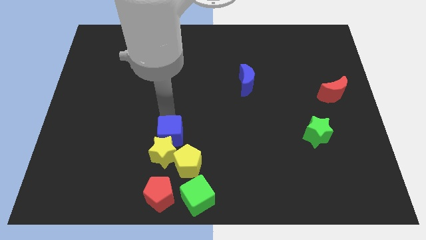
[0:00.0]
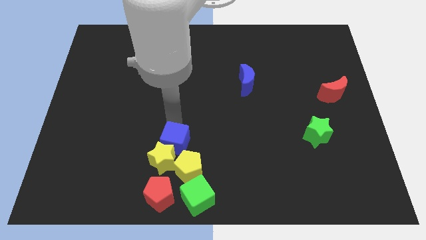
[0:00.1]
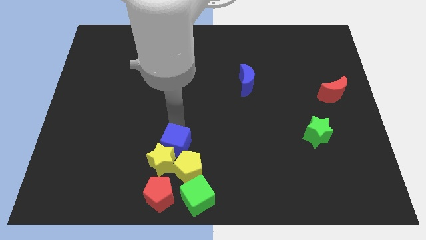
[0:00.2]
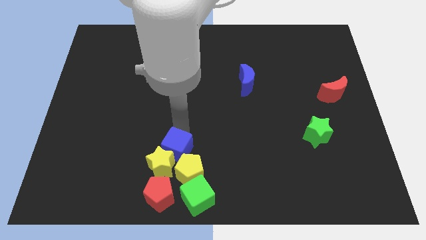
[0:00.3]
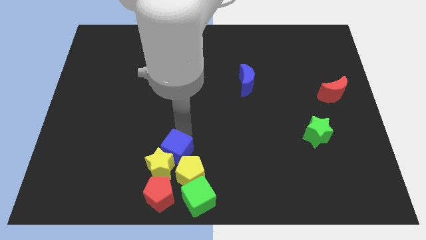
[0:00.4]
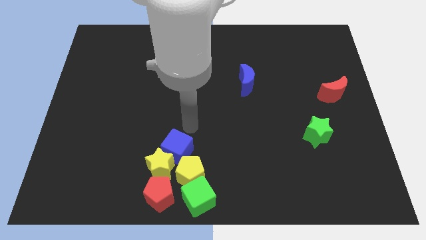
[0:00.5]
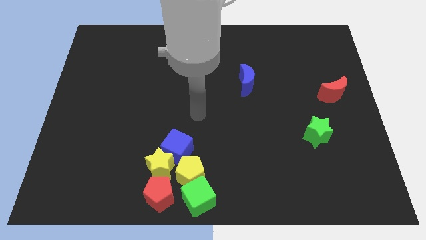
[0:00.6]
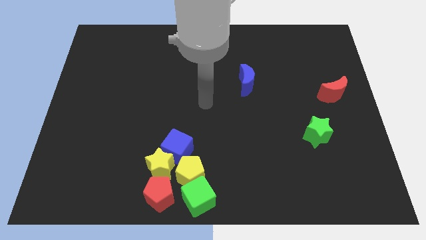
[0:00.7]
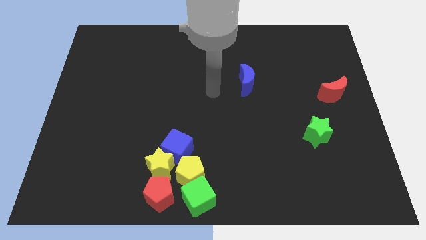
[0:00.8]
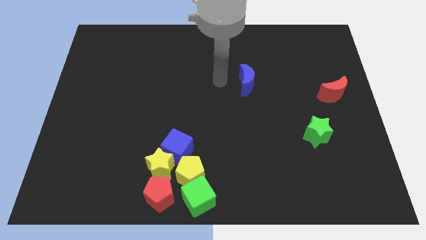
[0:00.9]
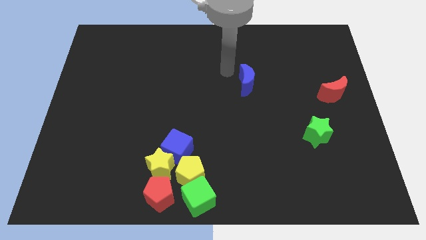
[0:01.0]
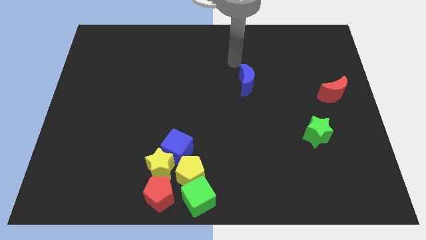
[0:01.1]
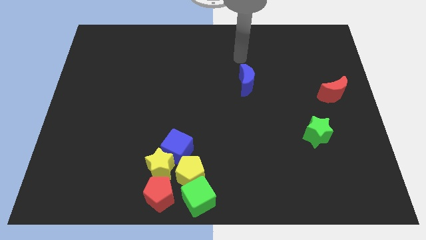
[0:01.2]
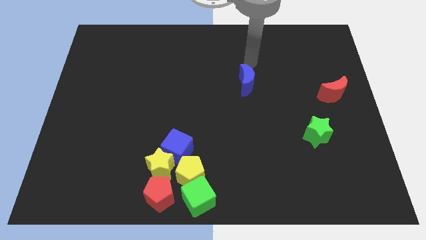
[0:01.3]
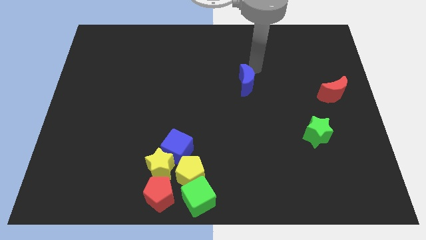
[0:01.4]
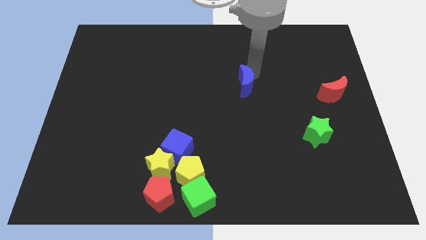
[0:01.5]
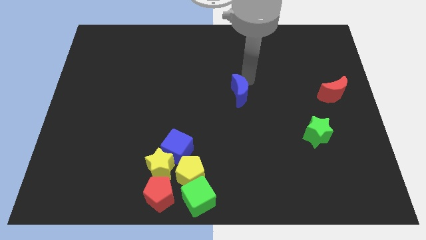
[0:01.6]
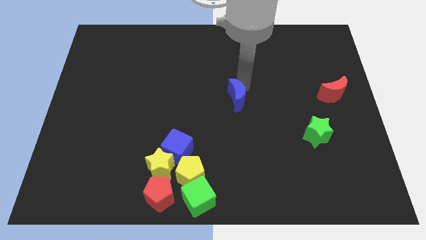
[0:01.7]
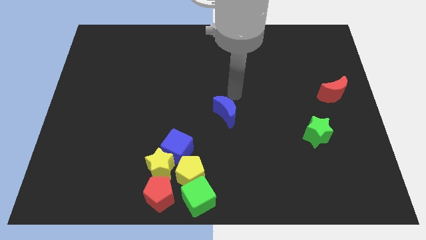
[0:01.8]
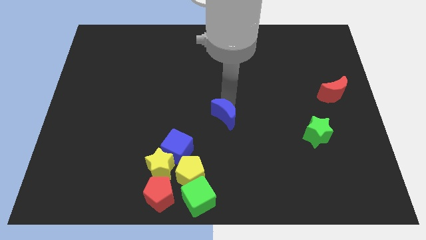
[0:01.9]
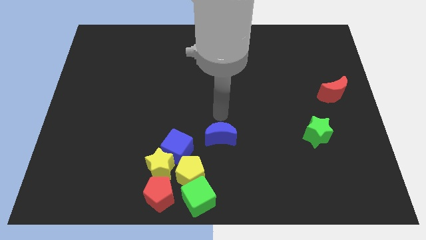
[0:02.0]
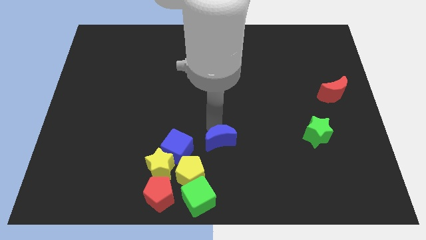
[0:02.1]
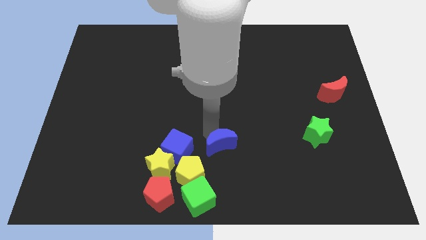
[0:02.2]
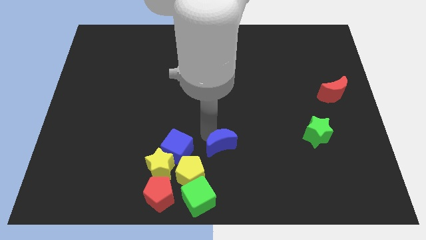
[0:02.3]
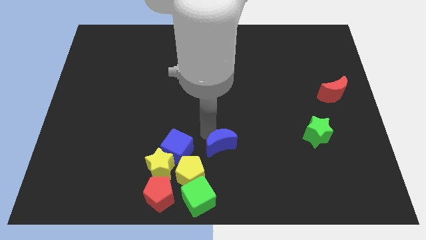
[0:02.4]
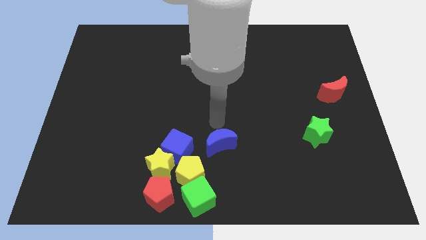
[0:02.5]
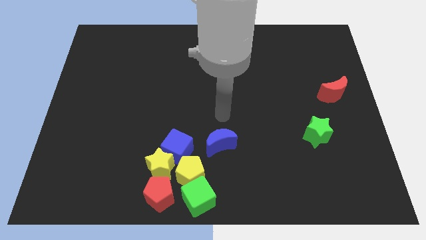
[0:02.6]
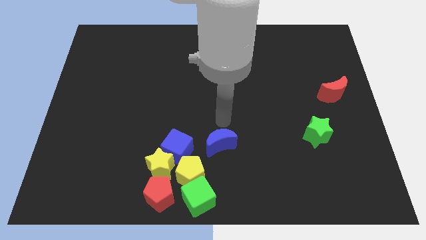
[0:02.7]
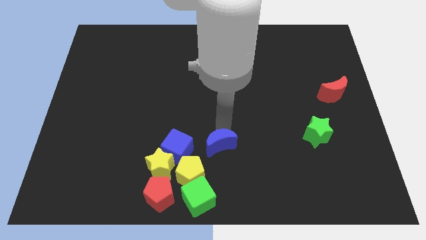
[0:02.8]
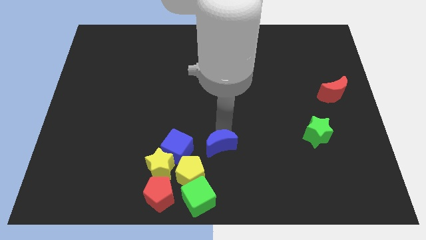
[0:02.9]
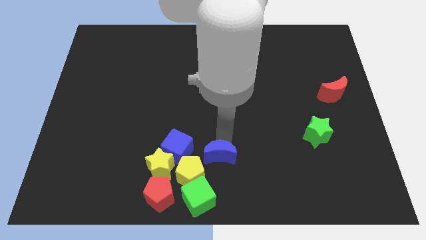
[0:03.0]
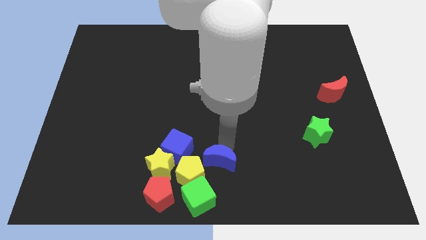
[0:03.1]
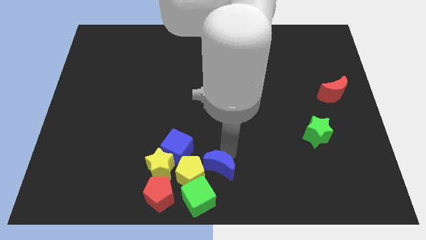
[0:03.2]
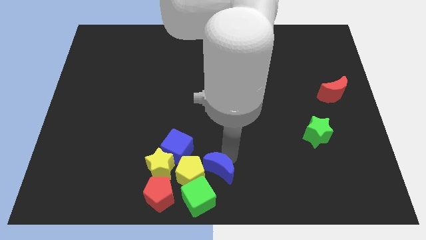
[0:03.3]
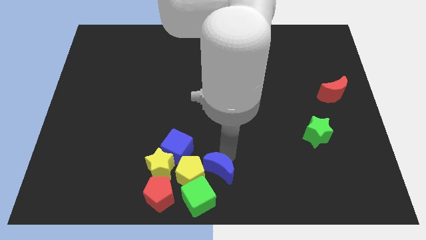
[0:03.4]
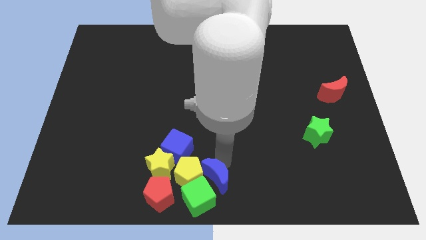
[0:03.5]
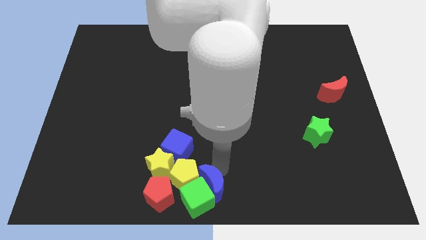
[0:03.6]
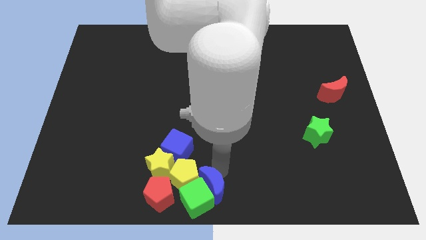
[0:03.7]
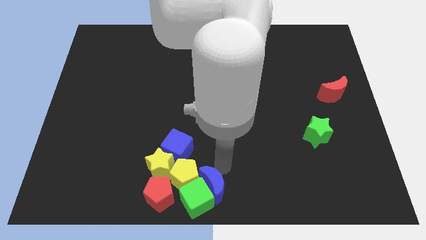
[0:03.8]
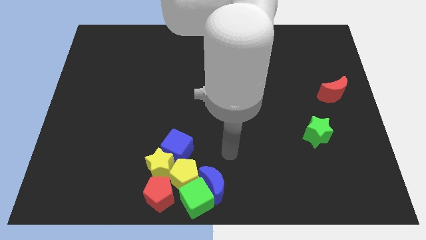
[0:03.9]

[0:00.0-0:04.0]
push blue moon into group of blocks

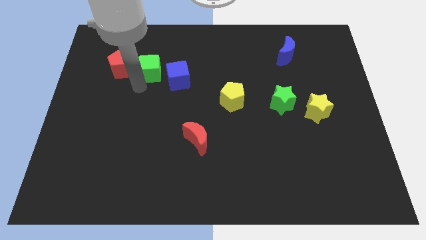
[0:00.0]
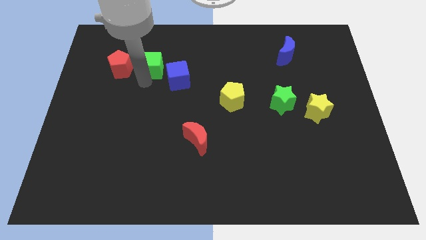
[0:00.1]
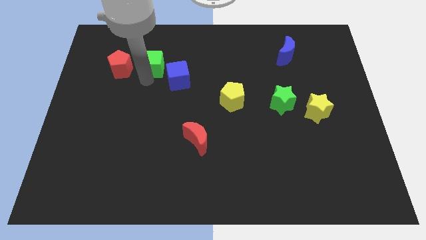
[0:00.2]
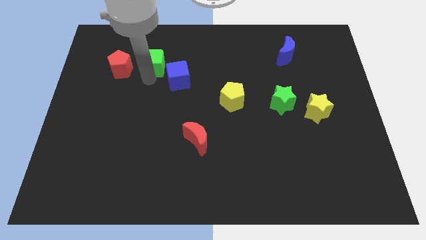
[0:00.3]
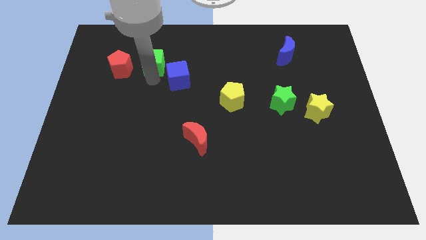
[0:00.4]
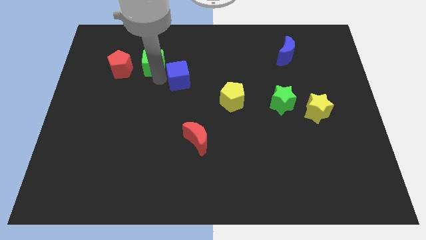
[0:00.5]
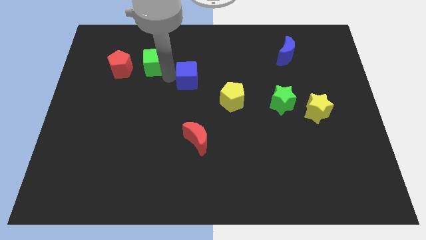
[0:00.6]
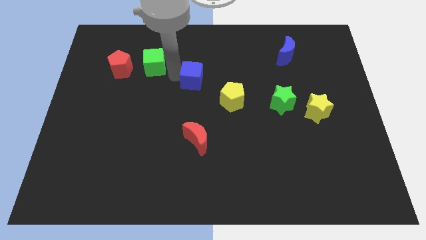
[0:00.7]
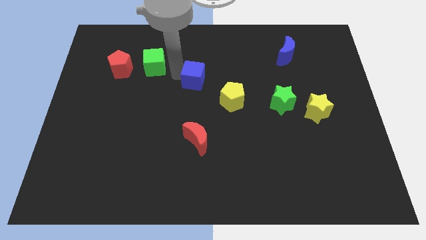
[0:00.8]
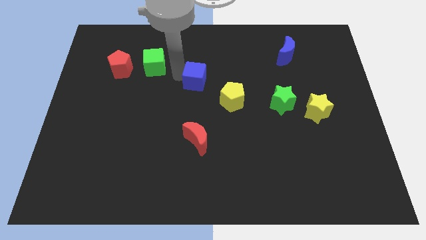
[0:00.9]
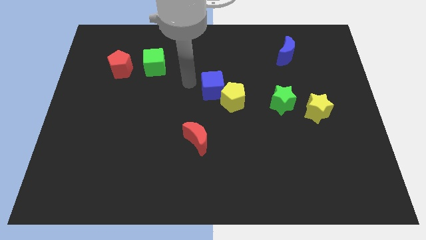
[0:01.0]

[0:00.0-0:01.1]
slide blue cube into yellow pentagon

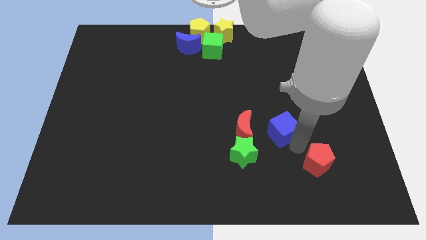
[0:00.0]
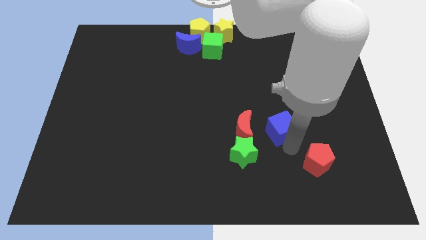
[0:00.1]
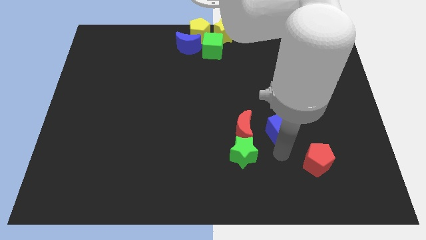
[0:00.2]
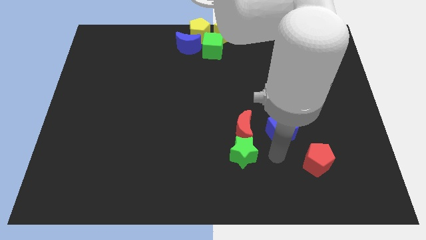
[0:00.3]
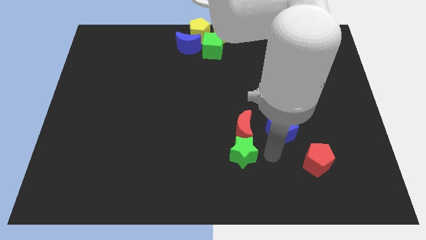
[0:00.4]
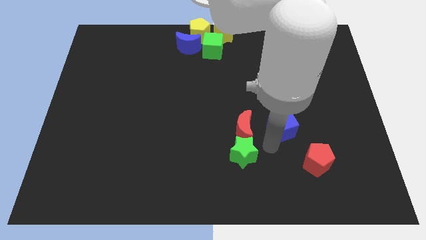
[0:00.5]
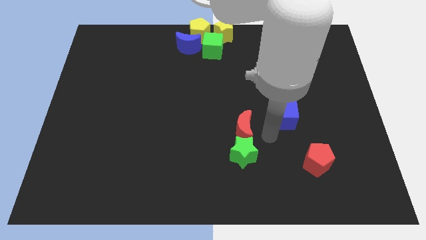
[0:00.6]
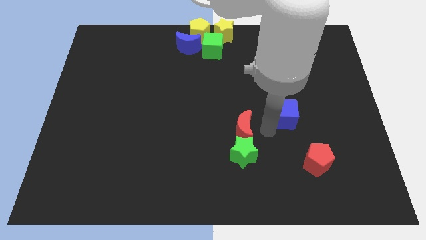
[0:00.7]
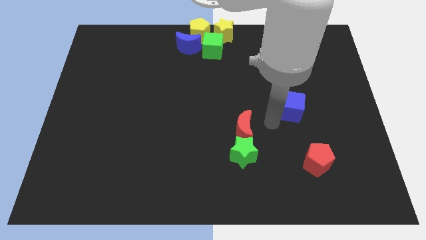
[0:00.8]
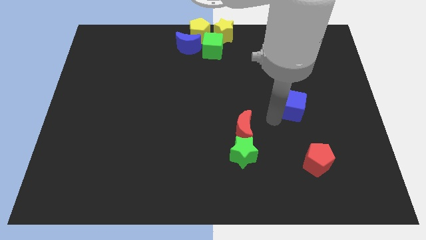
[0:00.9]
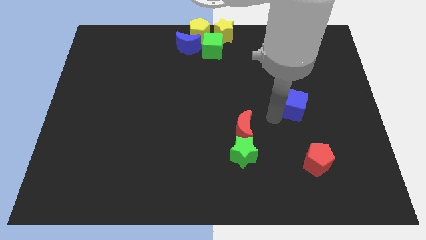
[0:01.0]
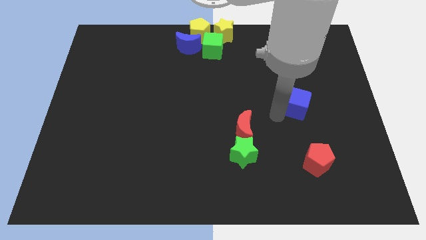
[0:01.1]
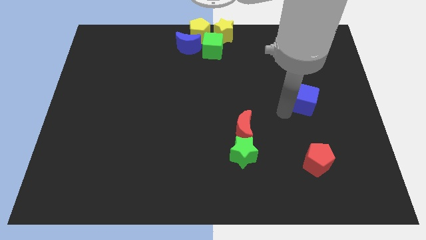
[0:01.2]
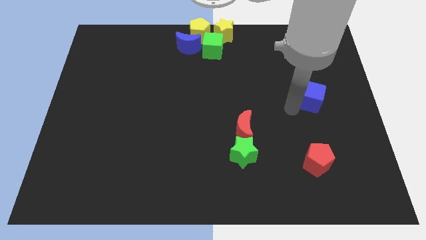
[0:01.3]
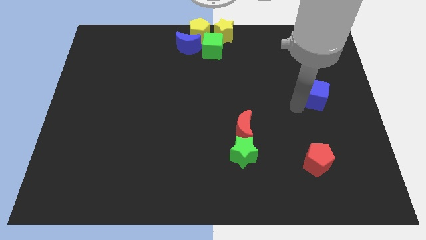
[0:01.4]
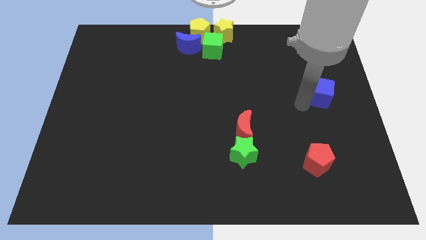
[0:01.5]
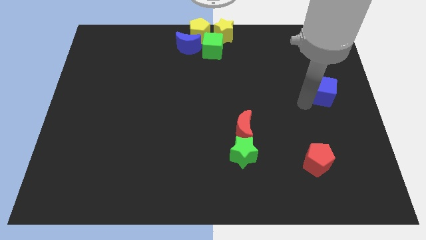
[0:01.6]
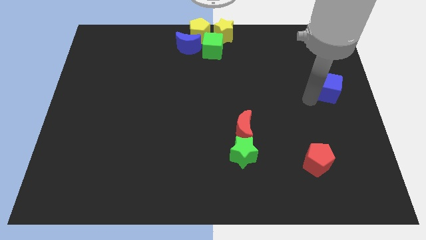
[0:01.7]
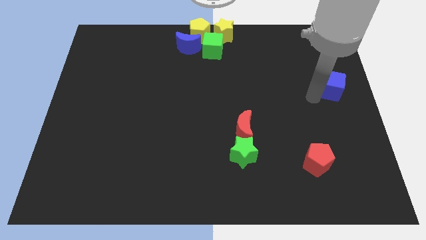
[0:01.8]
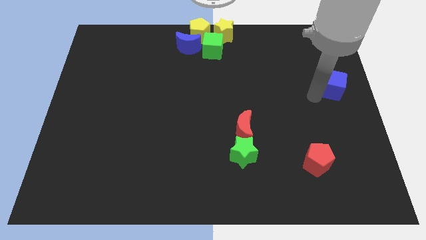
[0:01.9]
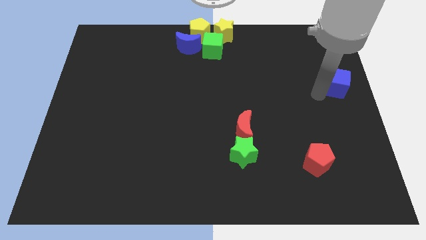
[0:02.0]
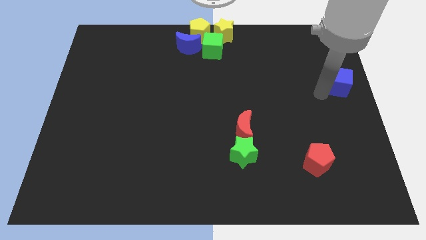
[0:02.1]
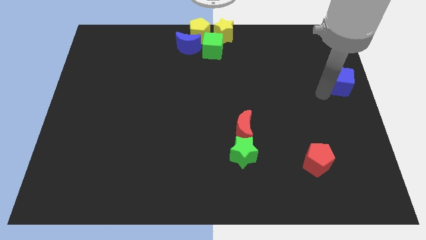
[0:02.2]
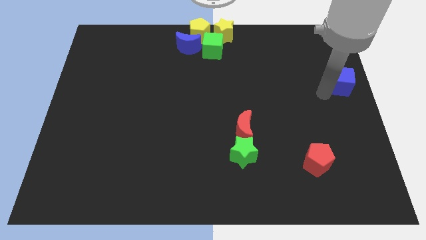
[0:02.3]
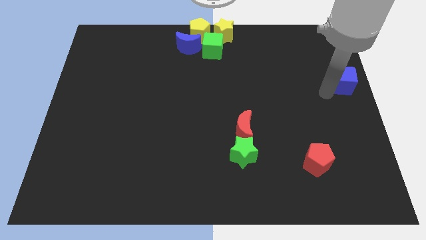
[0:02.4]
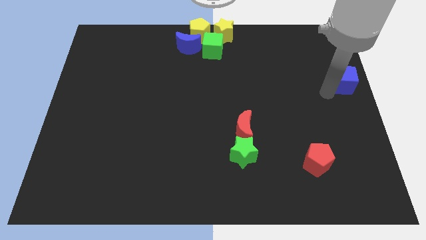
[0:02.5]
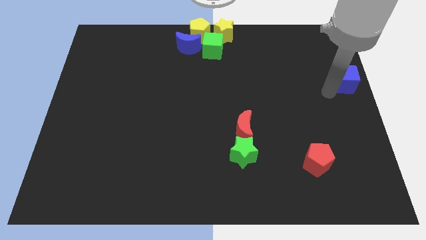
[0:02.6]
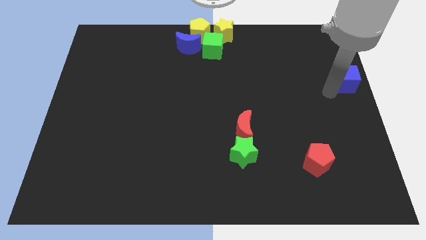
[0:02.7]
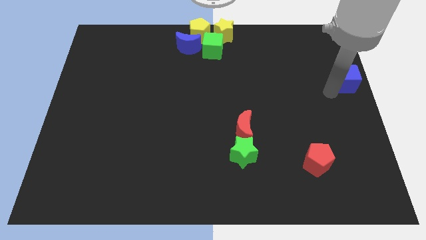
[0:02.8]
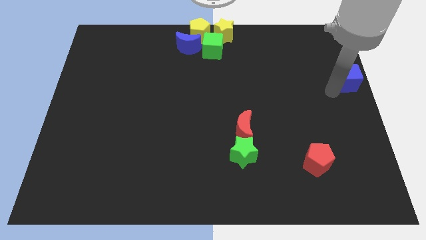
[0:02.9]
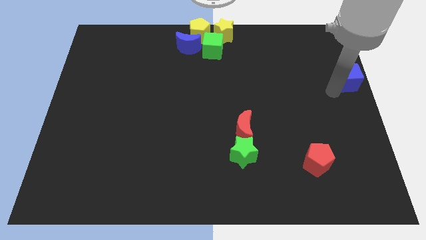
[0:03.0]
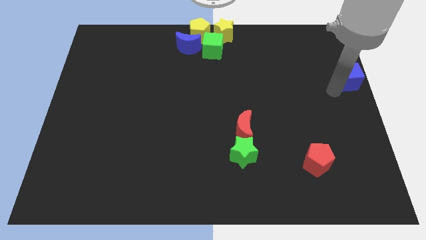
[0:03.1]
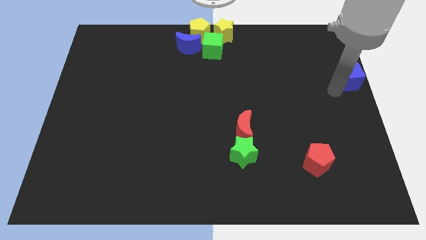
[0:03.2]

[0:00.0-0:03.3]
place the blue cube diagonal to the red pentagon

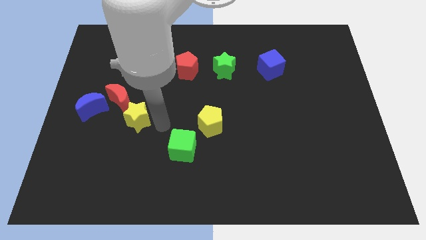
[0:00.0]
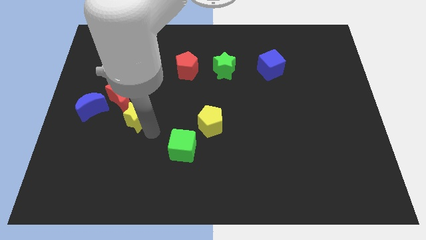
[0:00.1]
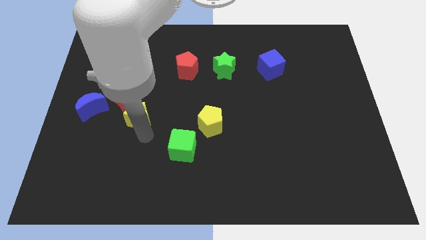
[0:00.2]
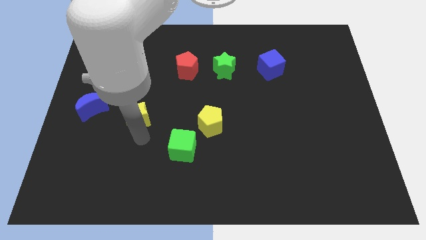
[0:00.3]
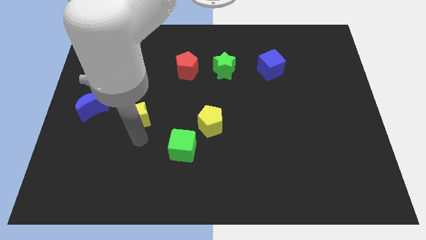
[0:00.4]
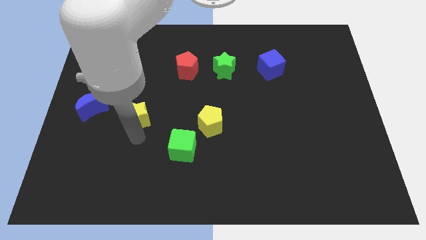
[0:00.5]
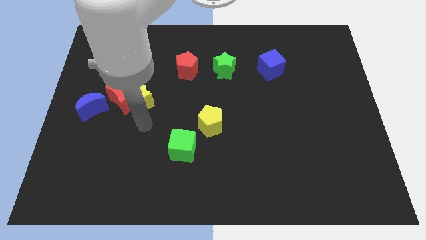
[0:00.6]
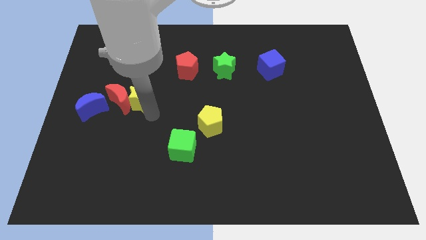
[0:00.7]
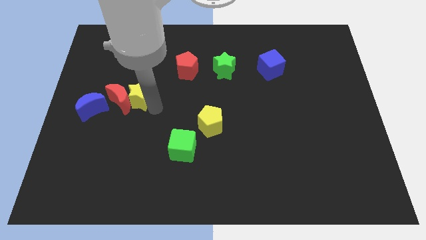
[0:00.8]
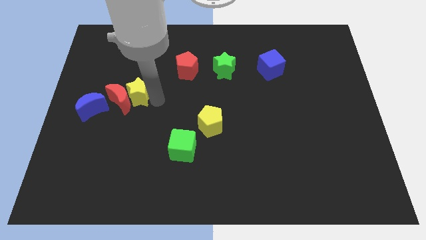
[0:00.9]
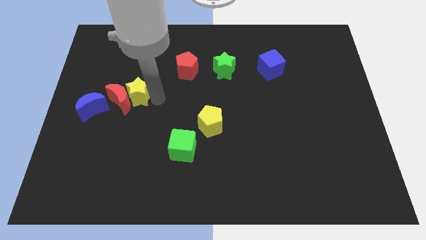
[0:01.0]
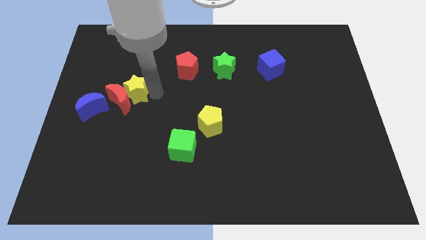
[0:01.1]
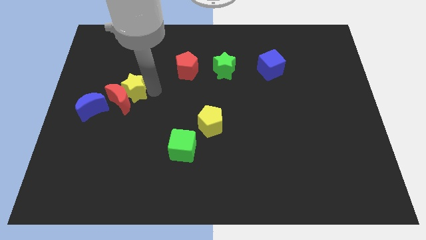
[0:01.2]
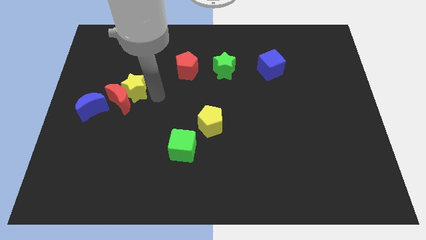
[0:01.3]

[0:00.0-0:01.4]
place yellow star above red moon in diagonal position to the red moon
